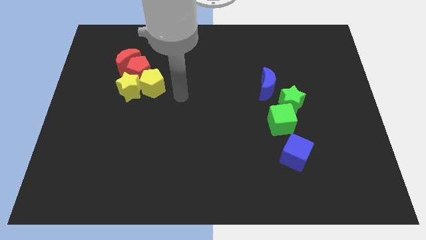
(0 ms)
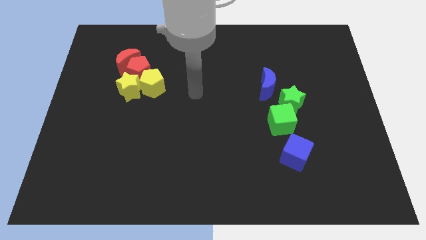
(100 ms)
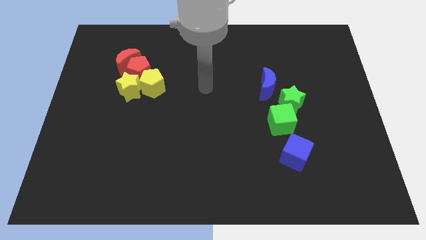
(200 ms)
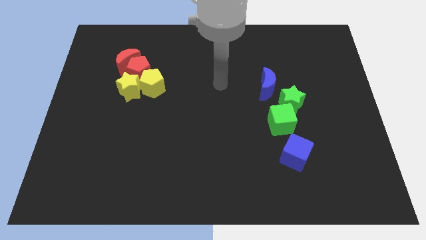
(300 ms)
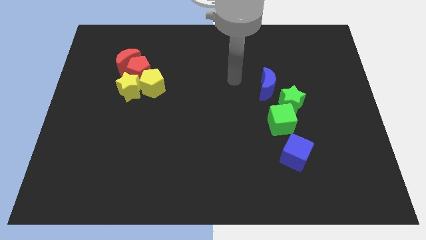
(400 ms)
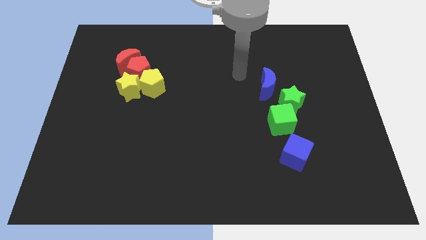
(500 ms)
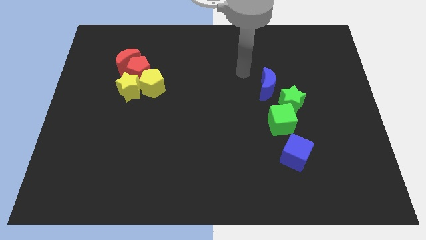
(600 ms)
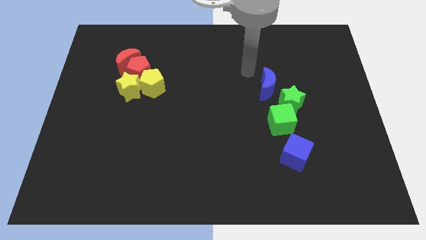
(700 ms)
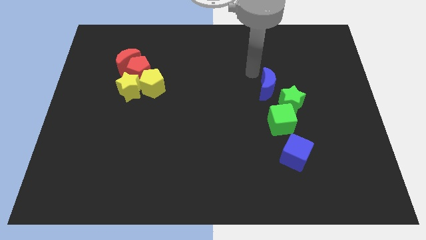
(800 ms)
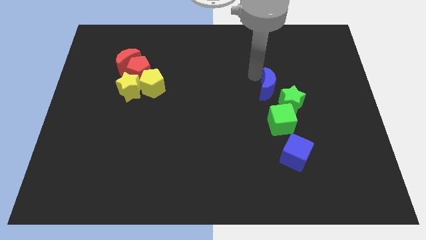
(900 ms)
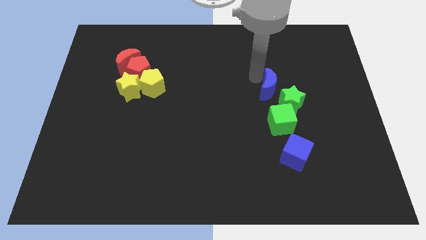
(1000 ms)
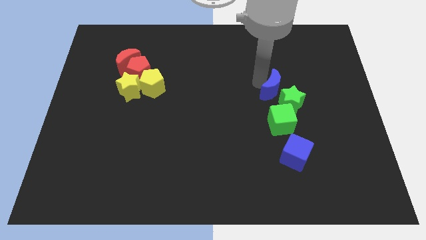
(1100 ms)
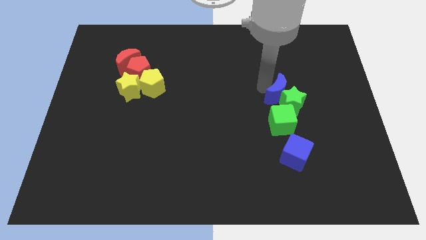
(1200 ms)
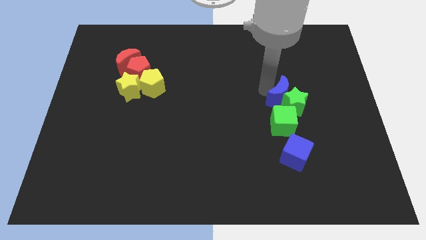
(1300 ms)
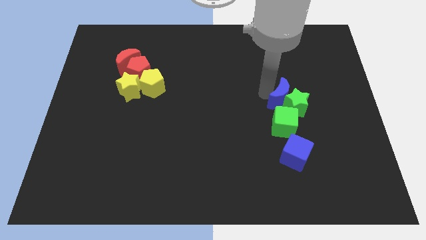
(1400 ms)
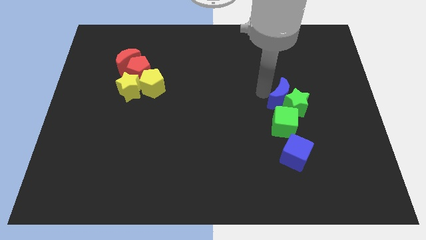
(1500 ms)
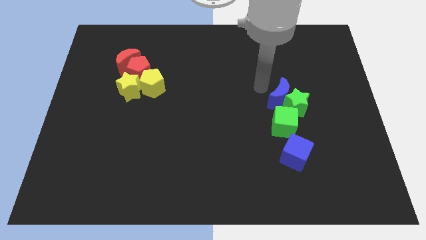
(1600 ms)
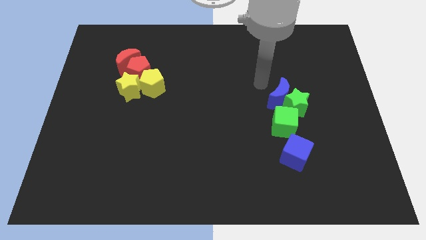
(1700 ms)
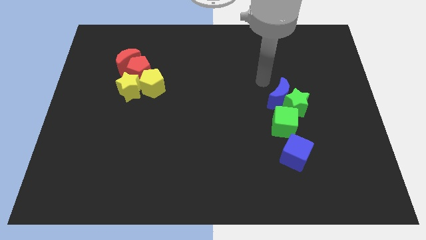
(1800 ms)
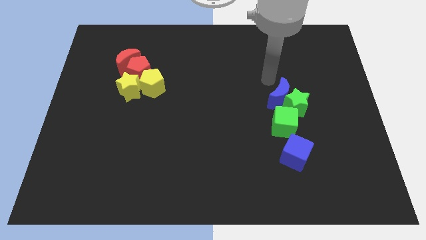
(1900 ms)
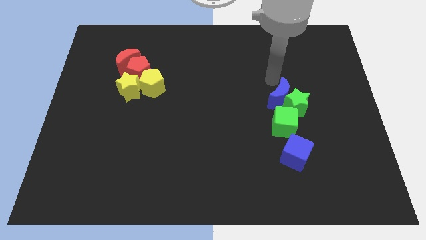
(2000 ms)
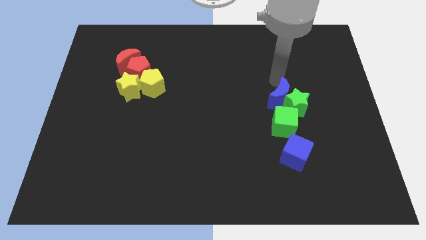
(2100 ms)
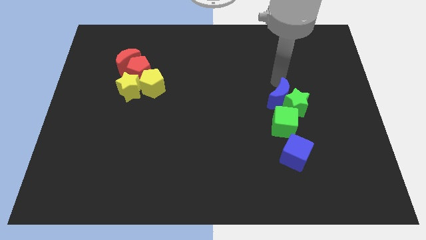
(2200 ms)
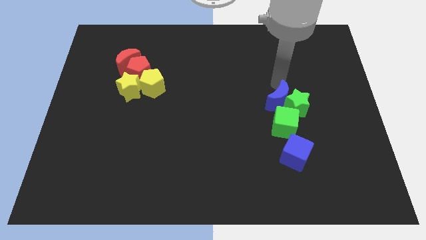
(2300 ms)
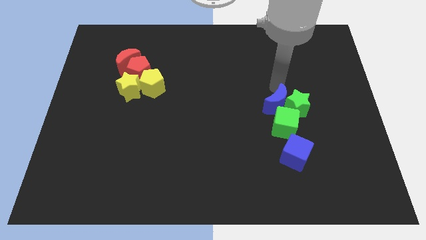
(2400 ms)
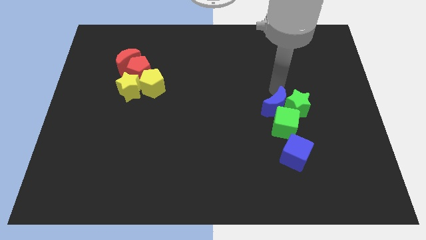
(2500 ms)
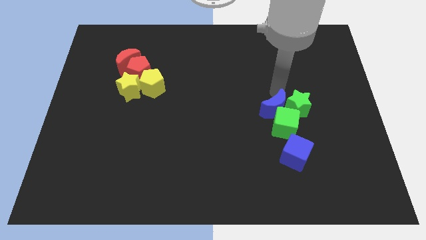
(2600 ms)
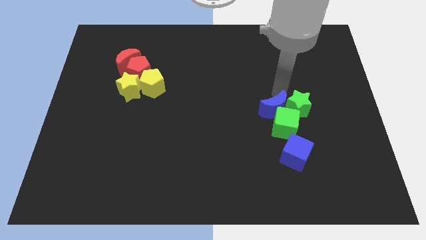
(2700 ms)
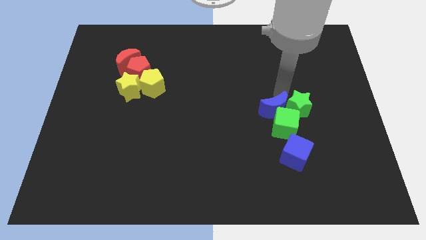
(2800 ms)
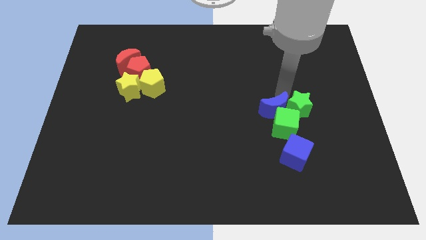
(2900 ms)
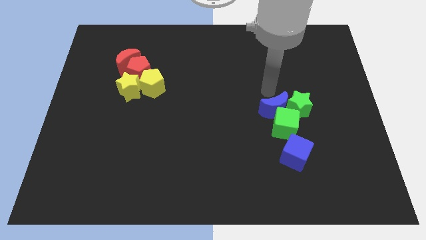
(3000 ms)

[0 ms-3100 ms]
make the blue crescent to touch the green star

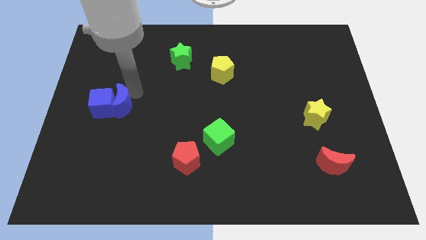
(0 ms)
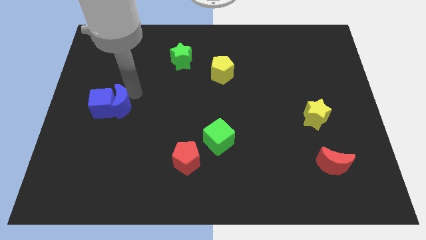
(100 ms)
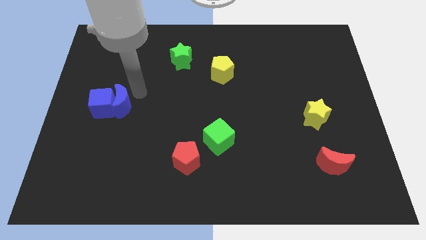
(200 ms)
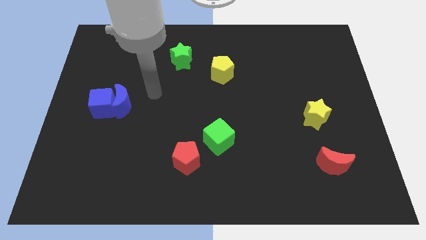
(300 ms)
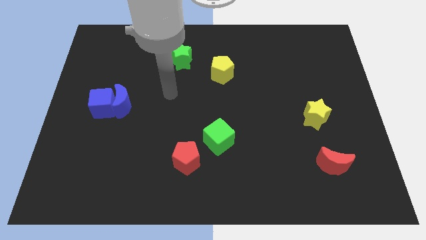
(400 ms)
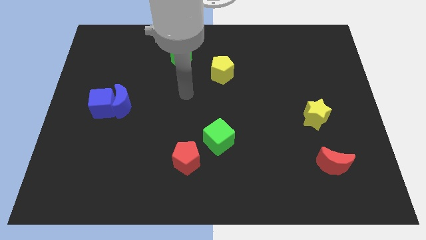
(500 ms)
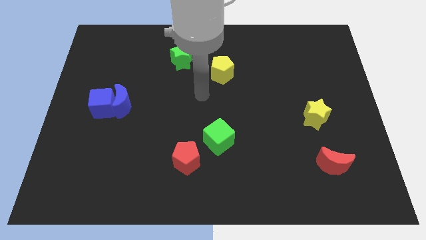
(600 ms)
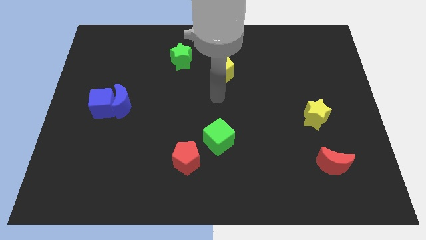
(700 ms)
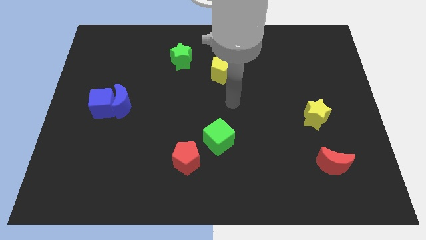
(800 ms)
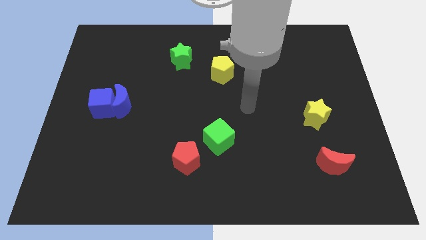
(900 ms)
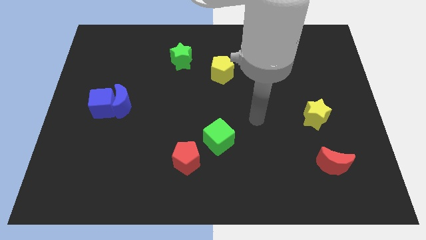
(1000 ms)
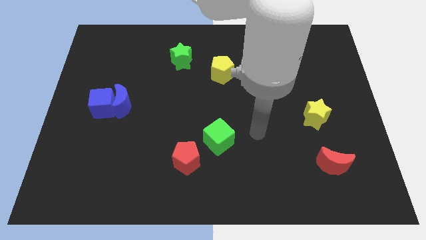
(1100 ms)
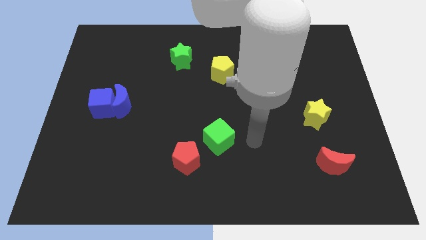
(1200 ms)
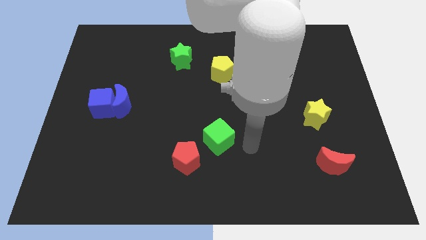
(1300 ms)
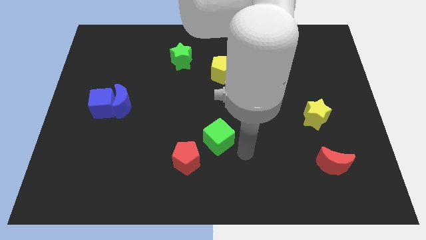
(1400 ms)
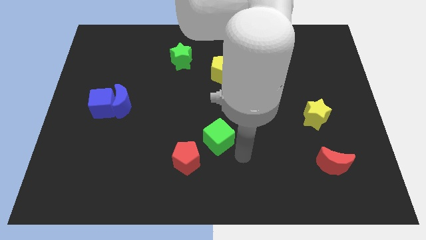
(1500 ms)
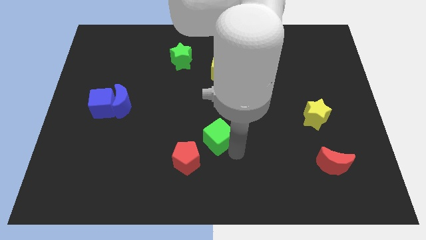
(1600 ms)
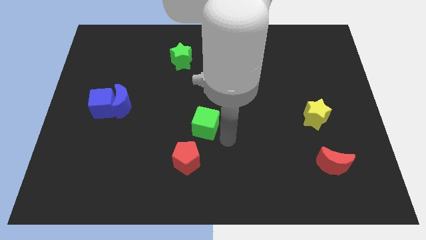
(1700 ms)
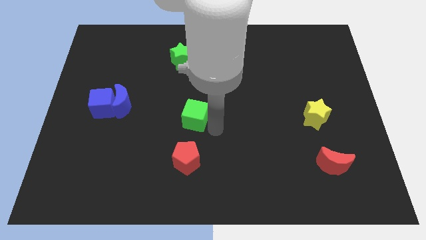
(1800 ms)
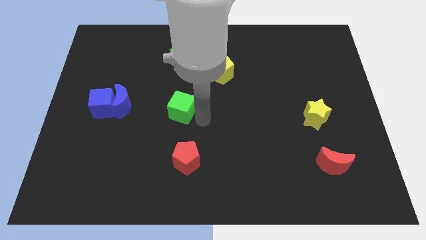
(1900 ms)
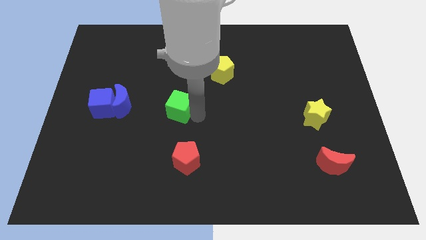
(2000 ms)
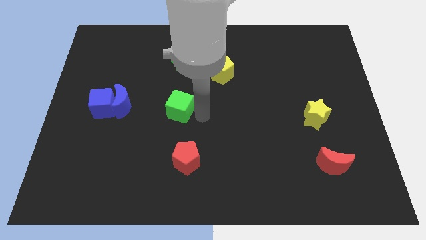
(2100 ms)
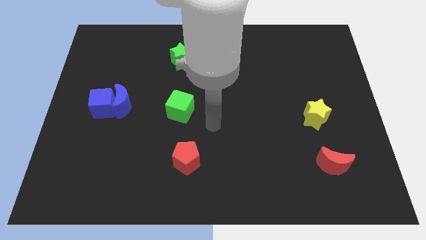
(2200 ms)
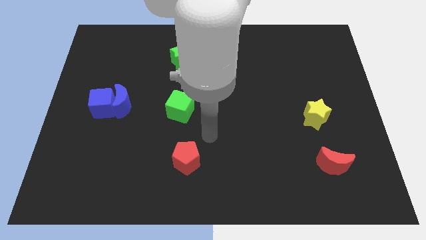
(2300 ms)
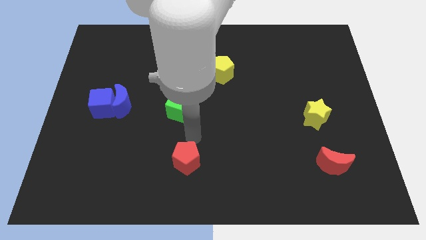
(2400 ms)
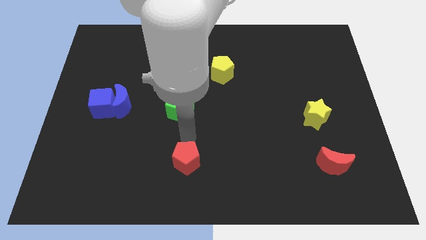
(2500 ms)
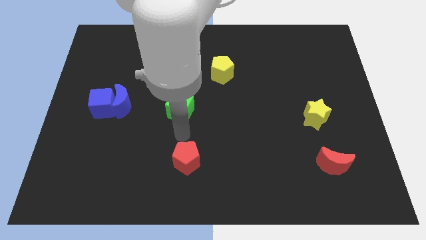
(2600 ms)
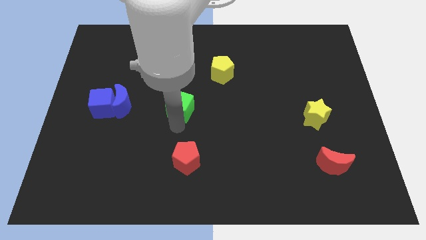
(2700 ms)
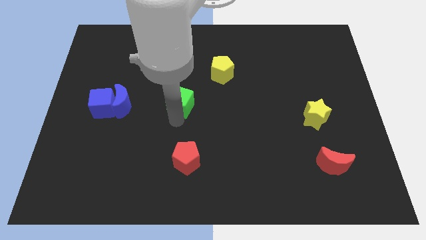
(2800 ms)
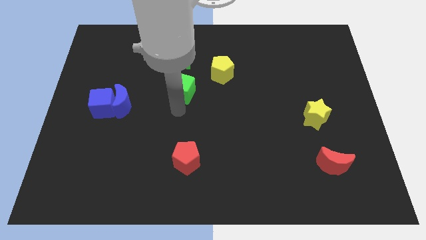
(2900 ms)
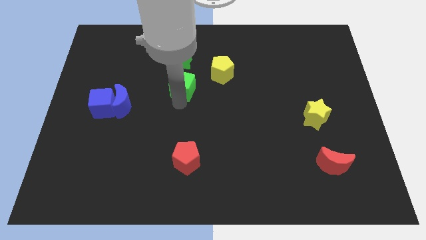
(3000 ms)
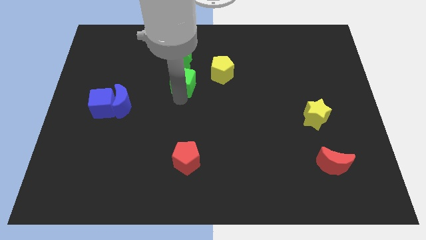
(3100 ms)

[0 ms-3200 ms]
place the green cube above the red pentagon

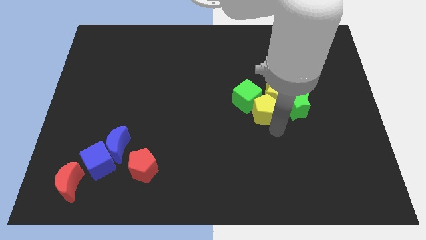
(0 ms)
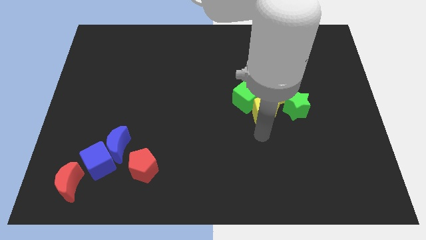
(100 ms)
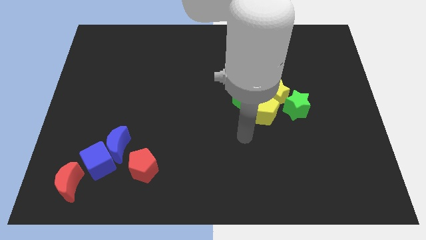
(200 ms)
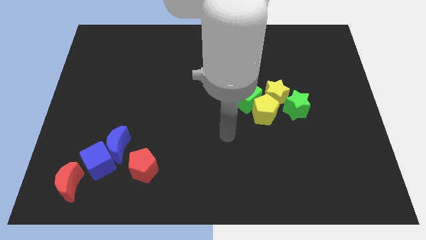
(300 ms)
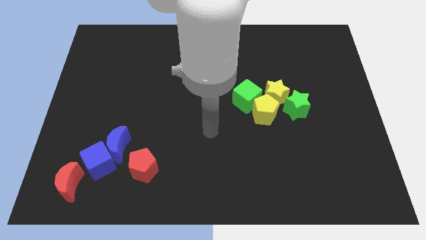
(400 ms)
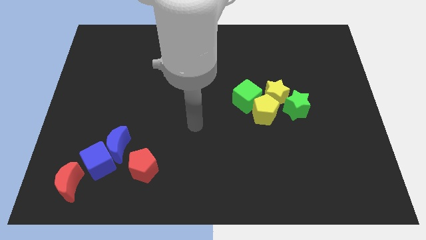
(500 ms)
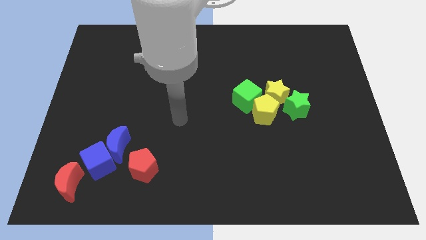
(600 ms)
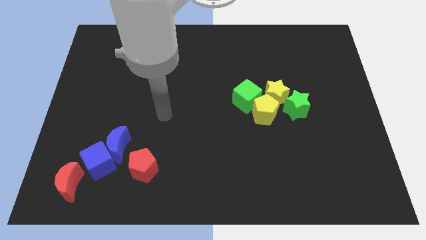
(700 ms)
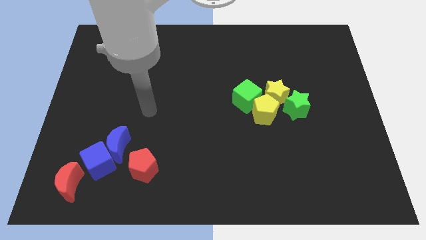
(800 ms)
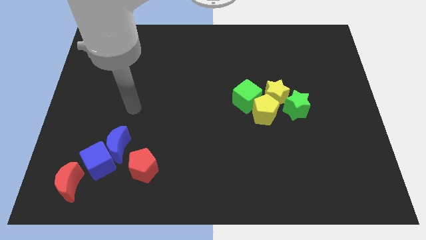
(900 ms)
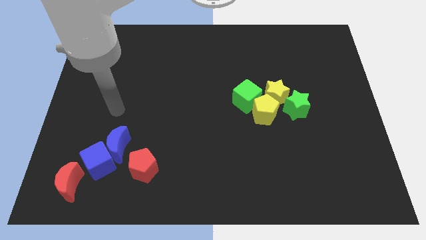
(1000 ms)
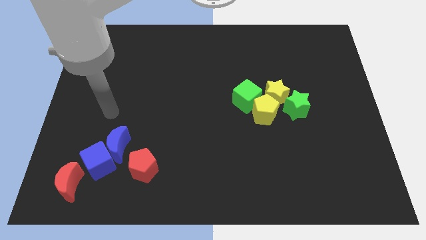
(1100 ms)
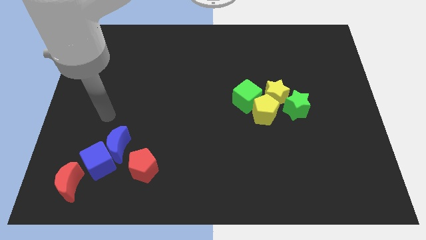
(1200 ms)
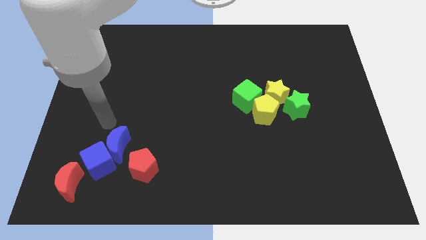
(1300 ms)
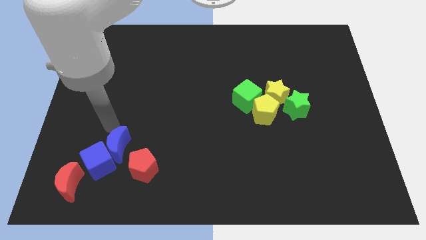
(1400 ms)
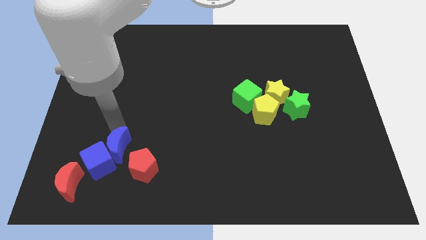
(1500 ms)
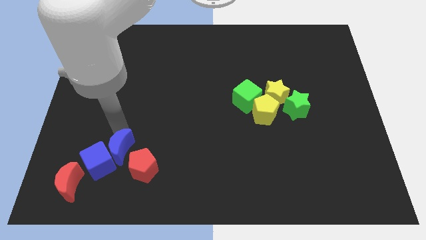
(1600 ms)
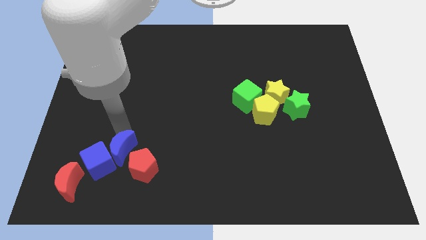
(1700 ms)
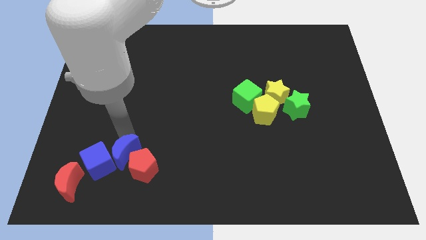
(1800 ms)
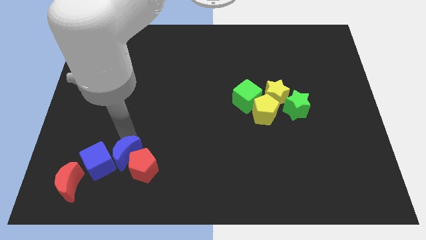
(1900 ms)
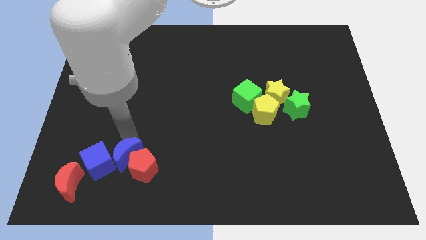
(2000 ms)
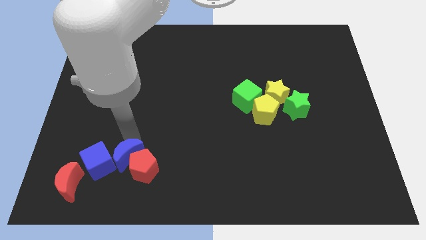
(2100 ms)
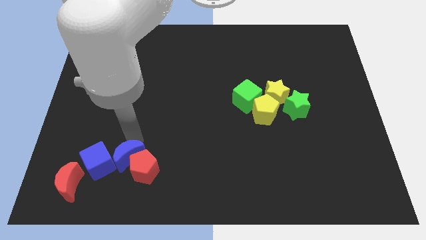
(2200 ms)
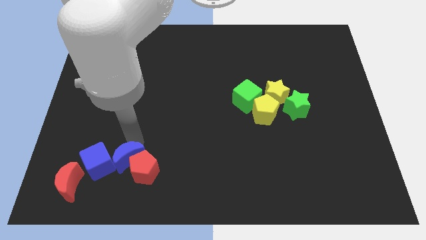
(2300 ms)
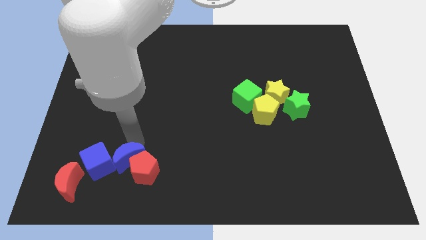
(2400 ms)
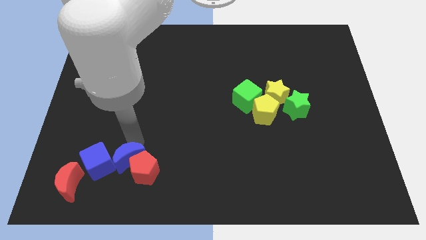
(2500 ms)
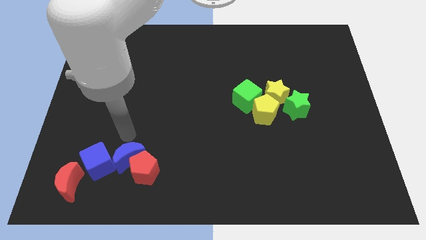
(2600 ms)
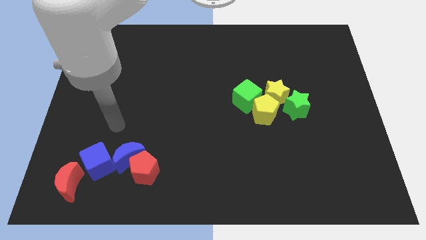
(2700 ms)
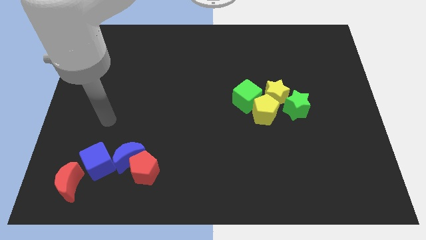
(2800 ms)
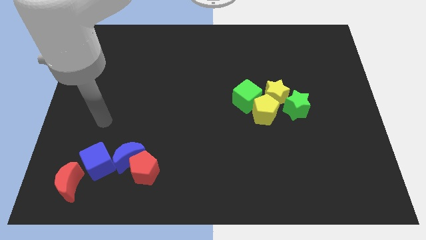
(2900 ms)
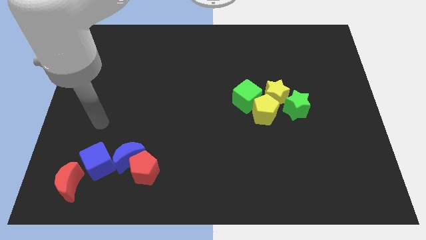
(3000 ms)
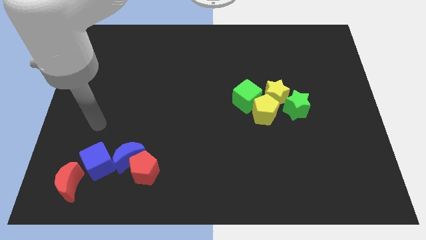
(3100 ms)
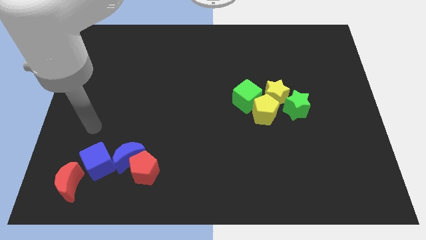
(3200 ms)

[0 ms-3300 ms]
move the blue moon into the red pentagon
